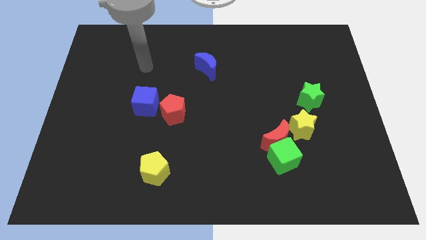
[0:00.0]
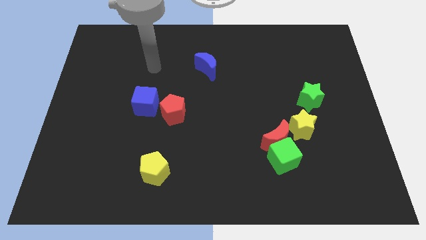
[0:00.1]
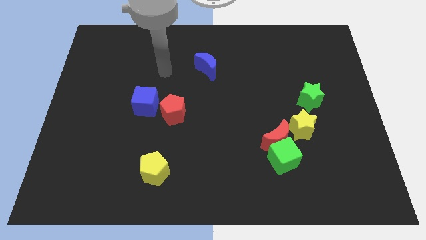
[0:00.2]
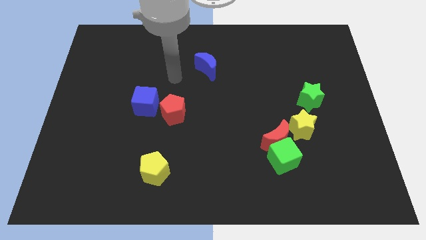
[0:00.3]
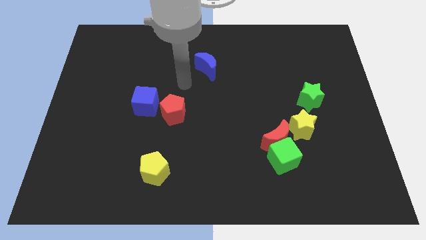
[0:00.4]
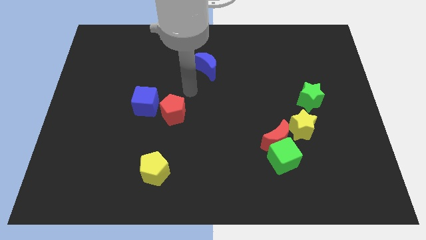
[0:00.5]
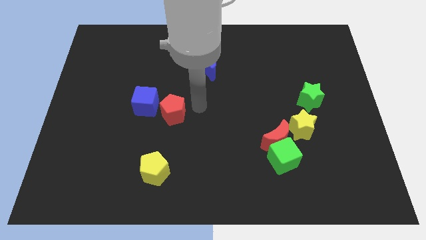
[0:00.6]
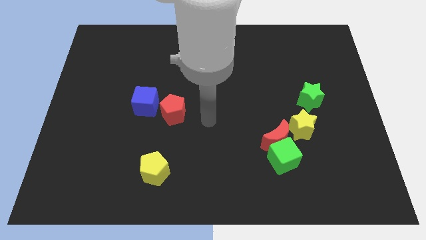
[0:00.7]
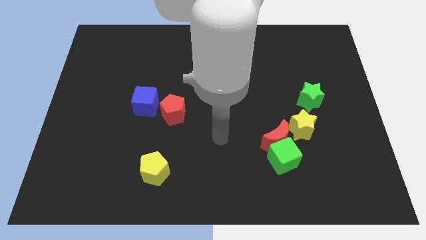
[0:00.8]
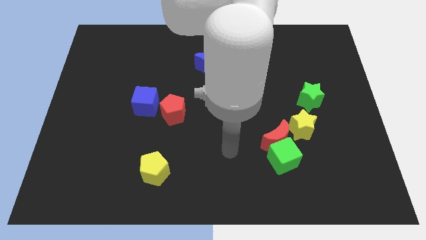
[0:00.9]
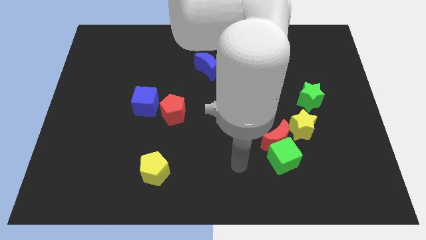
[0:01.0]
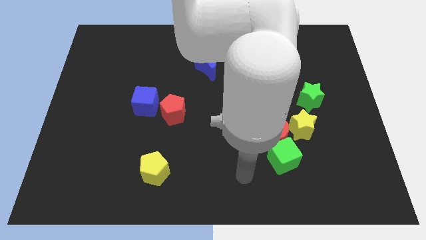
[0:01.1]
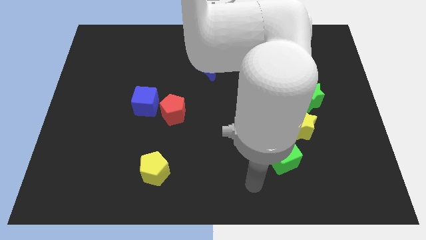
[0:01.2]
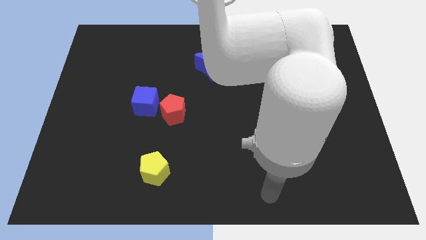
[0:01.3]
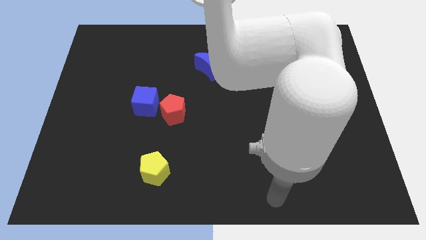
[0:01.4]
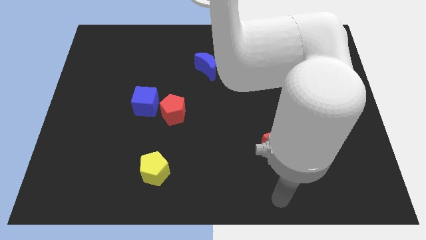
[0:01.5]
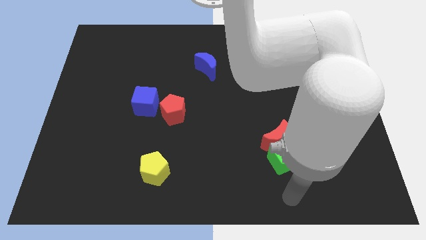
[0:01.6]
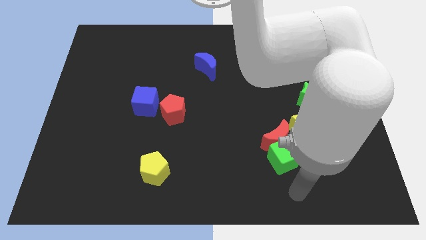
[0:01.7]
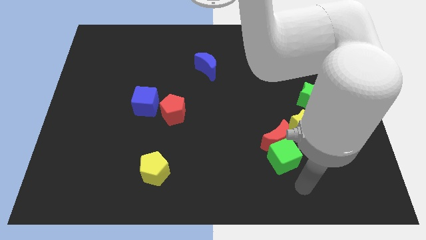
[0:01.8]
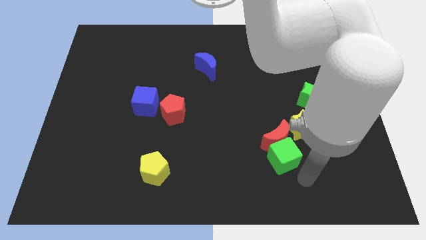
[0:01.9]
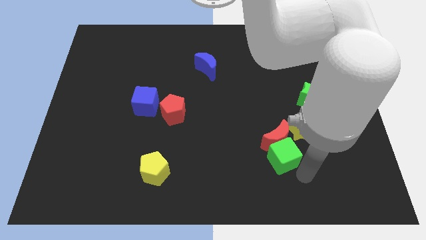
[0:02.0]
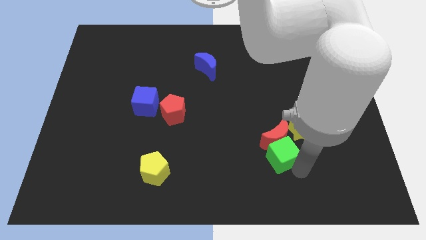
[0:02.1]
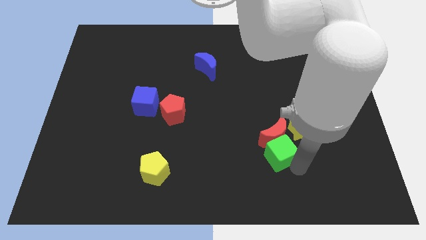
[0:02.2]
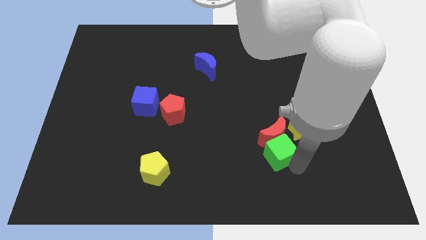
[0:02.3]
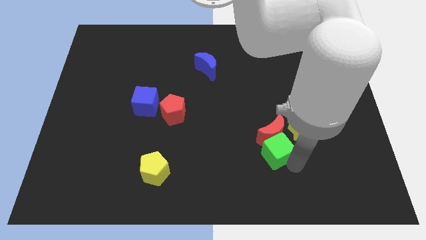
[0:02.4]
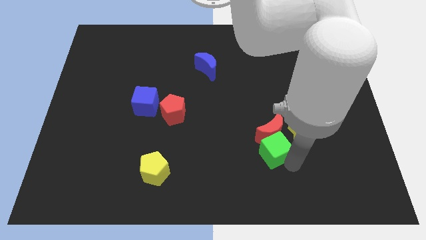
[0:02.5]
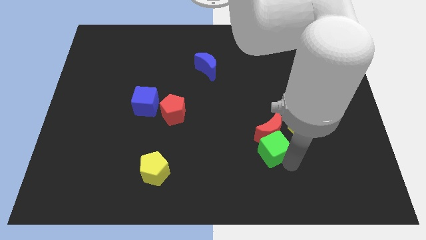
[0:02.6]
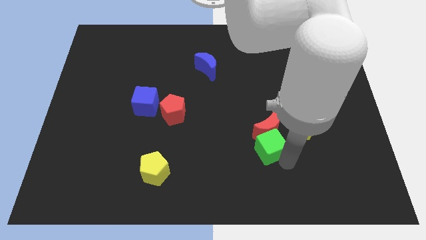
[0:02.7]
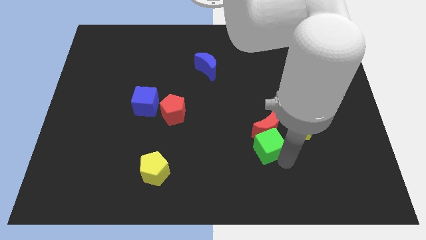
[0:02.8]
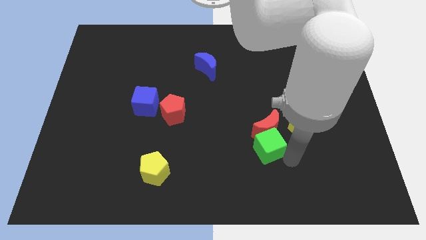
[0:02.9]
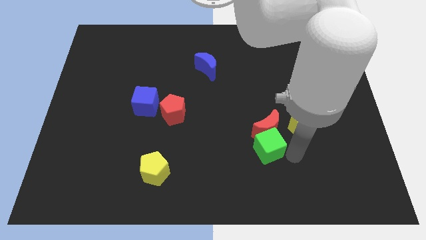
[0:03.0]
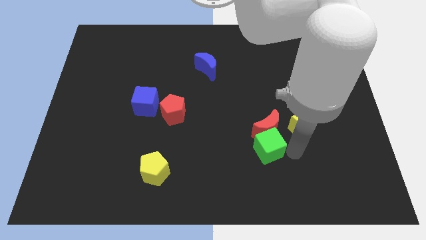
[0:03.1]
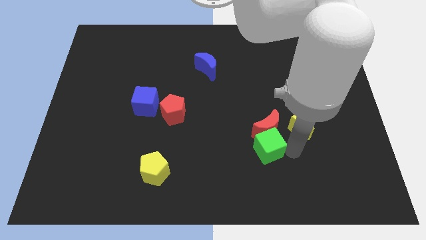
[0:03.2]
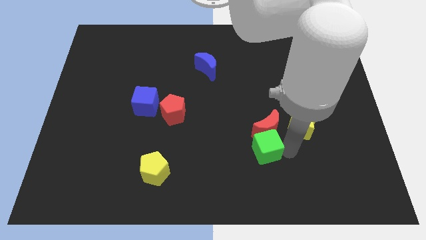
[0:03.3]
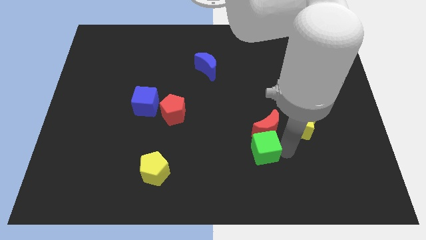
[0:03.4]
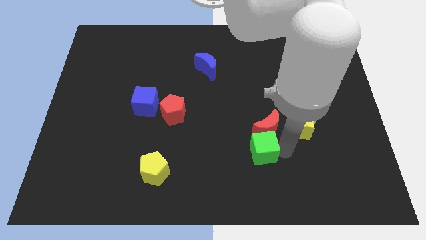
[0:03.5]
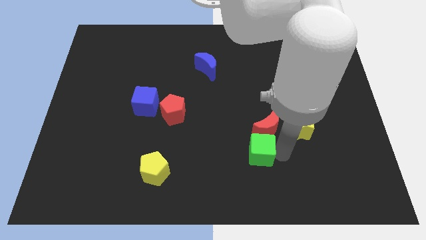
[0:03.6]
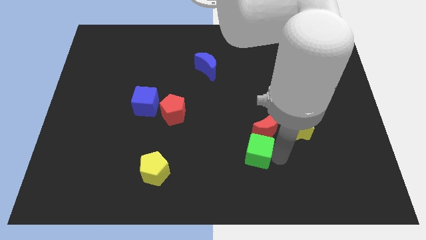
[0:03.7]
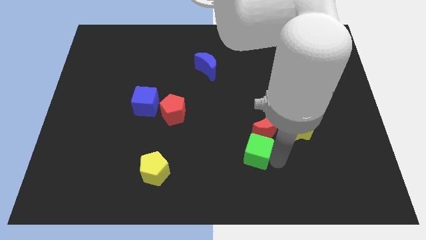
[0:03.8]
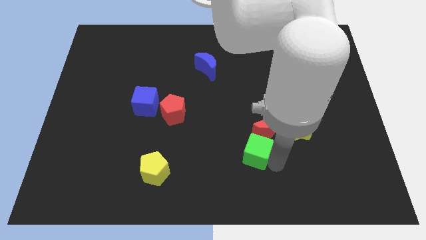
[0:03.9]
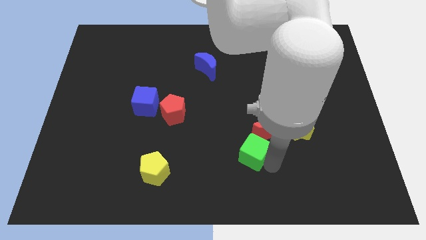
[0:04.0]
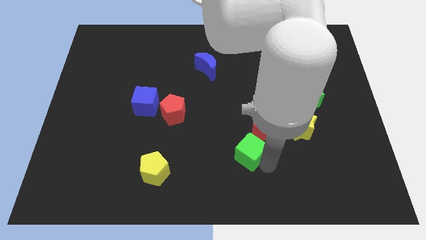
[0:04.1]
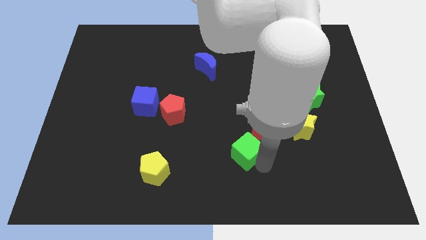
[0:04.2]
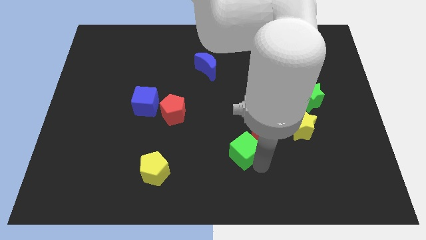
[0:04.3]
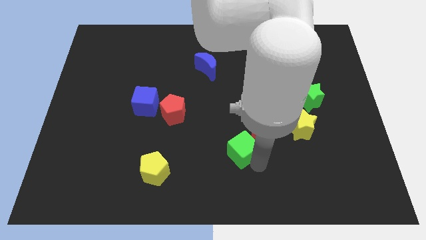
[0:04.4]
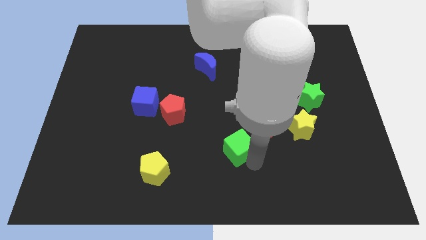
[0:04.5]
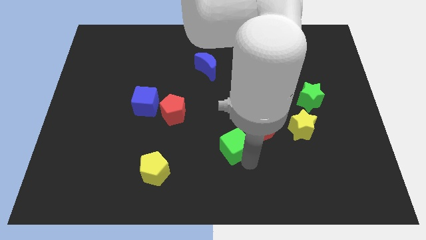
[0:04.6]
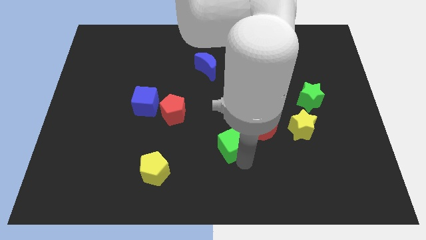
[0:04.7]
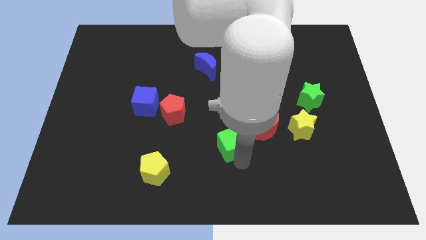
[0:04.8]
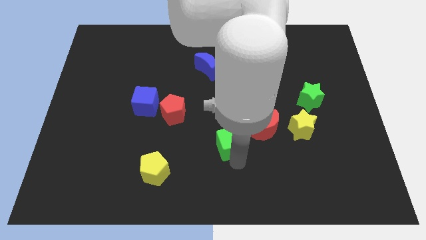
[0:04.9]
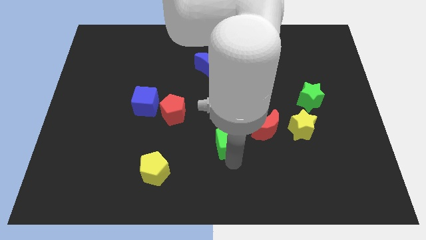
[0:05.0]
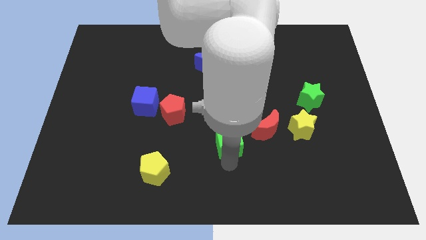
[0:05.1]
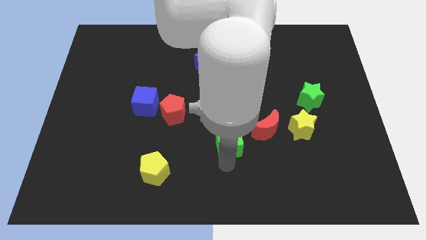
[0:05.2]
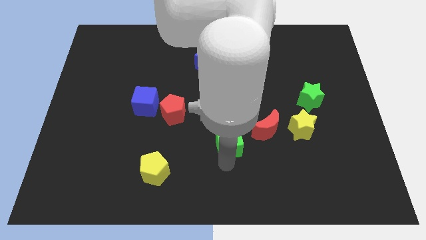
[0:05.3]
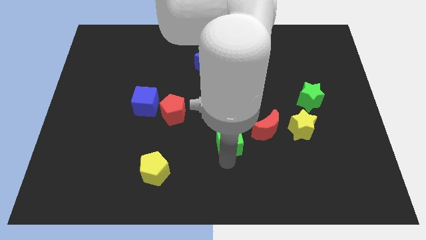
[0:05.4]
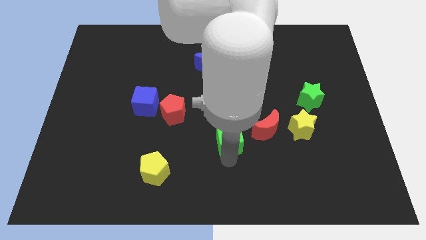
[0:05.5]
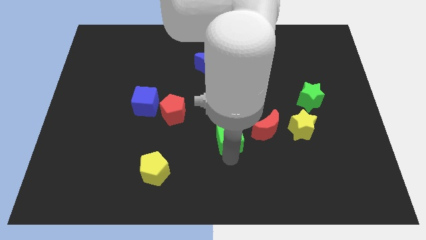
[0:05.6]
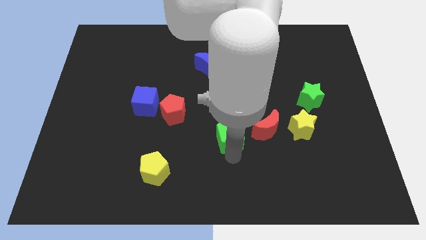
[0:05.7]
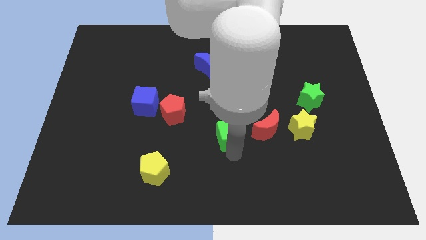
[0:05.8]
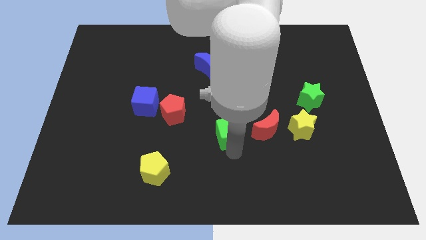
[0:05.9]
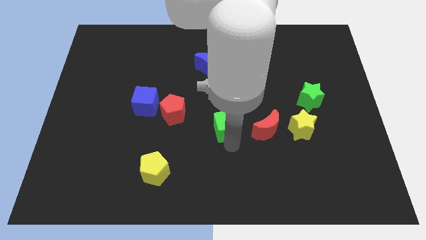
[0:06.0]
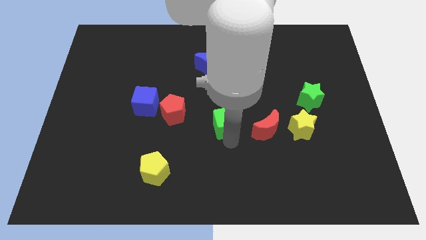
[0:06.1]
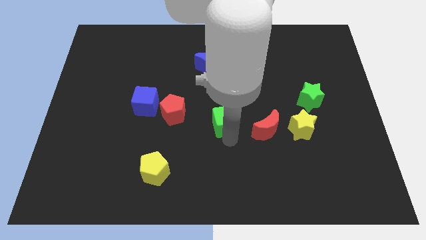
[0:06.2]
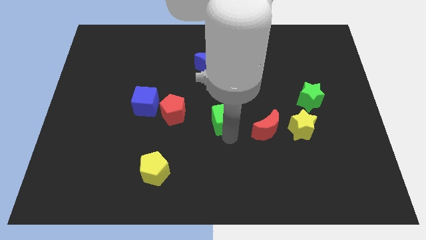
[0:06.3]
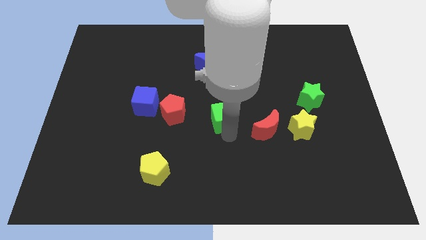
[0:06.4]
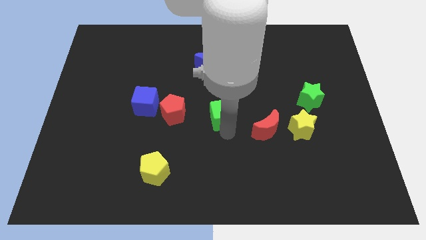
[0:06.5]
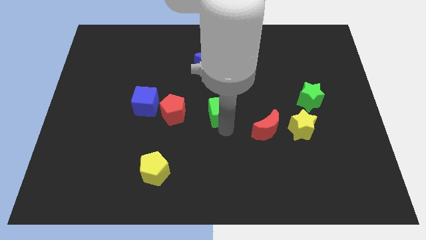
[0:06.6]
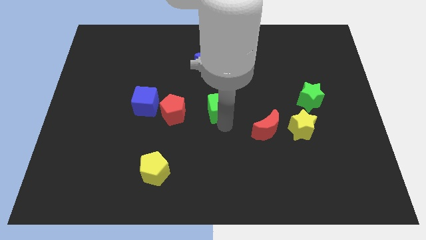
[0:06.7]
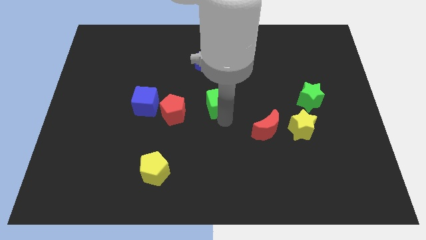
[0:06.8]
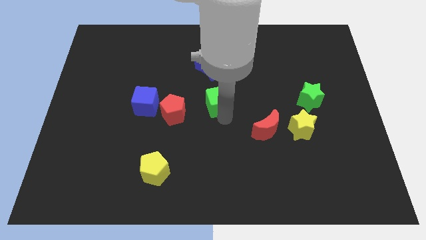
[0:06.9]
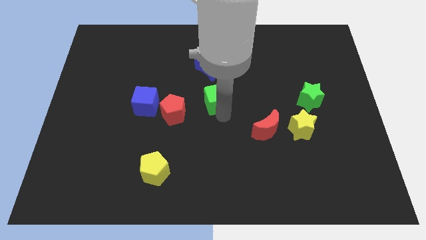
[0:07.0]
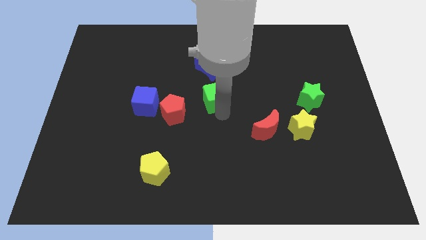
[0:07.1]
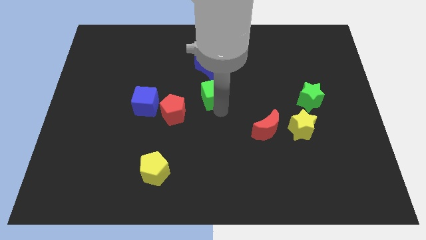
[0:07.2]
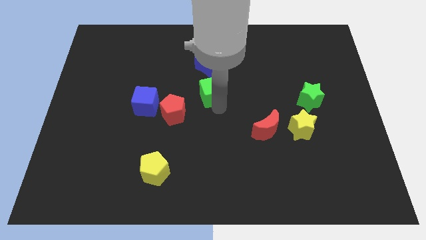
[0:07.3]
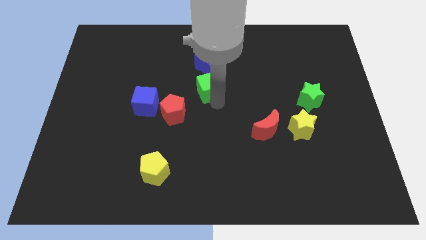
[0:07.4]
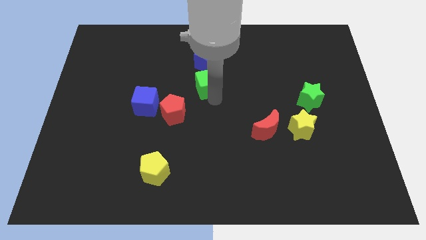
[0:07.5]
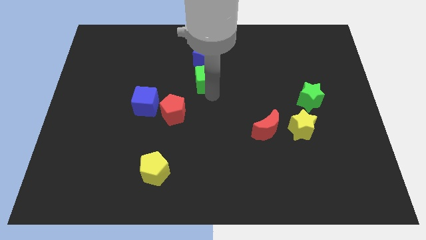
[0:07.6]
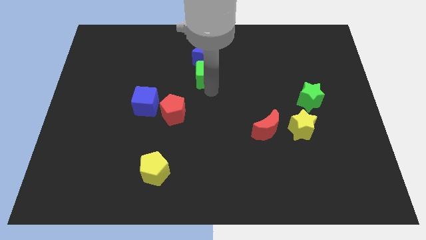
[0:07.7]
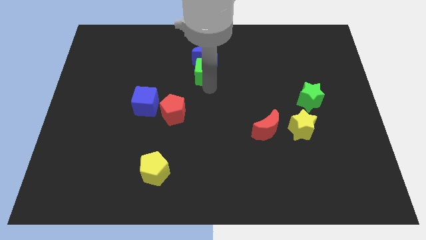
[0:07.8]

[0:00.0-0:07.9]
put the green cube to the blue moon

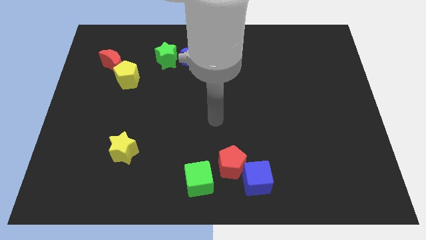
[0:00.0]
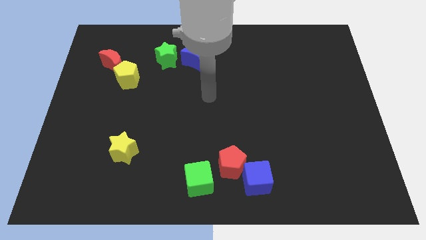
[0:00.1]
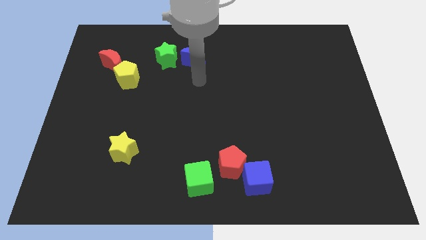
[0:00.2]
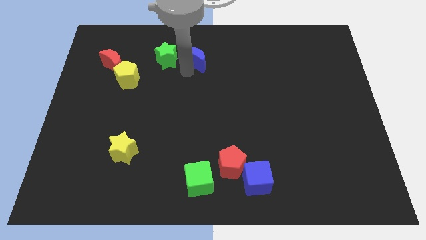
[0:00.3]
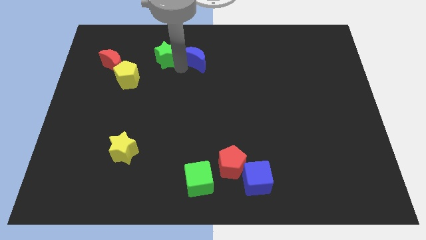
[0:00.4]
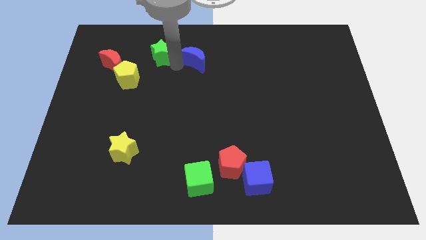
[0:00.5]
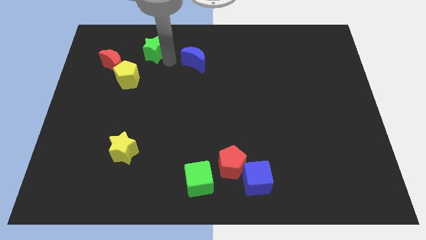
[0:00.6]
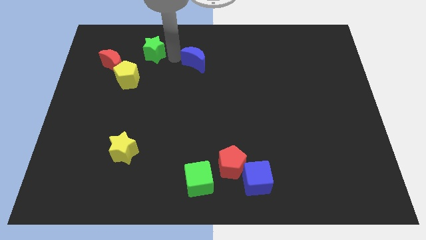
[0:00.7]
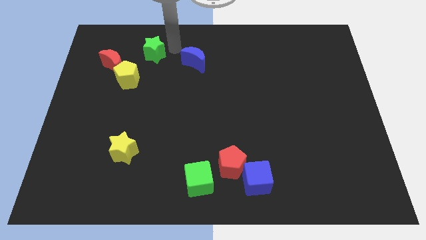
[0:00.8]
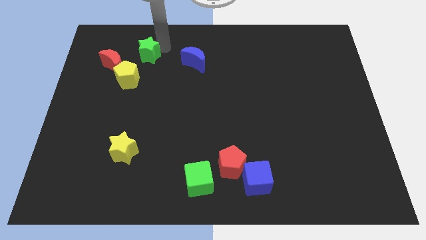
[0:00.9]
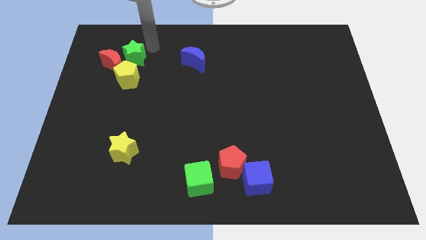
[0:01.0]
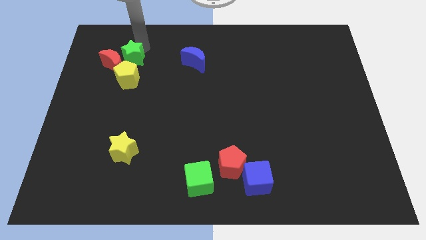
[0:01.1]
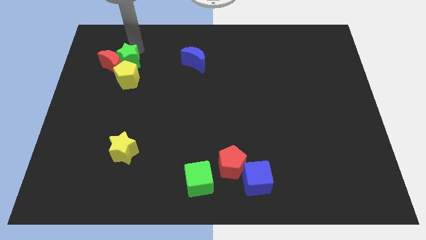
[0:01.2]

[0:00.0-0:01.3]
slide the green star to the red moon
